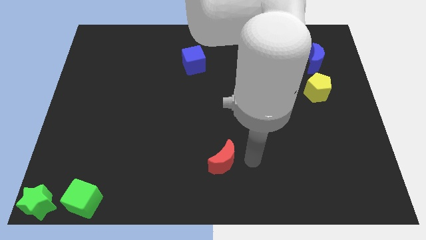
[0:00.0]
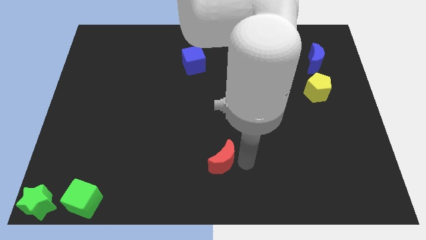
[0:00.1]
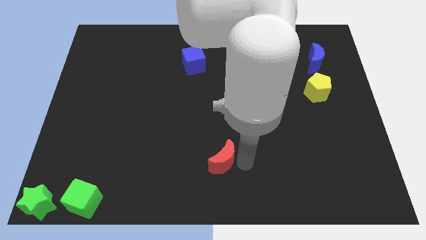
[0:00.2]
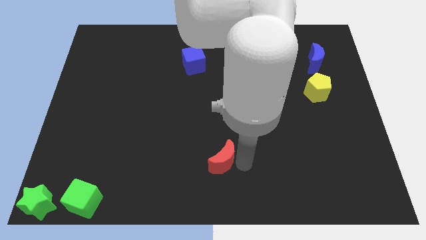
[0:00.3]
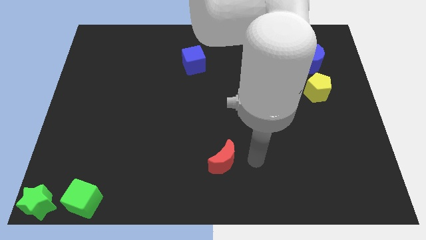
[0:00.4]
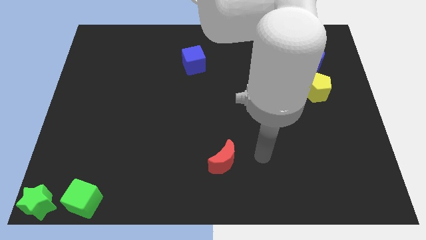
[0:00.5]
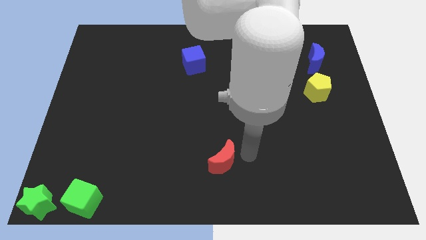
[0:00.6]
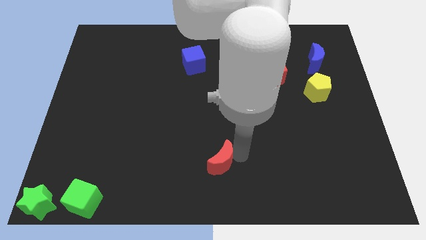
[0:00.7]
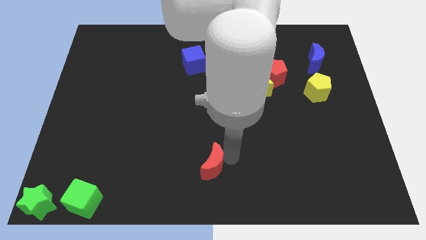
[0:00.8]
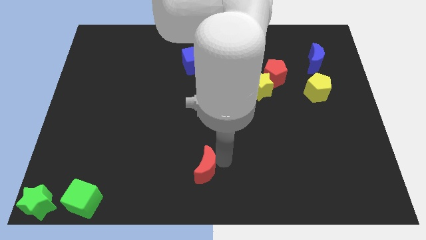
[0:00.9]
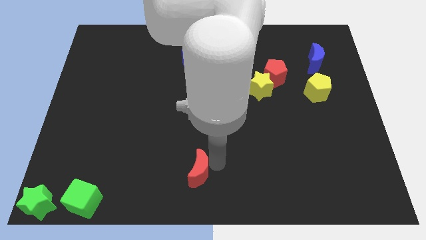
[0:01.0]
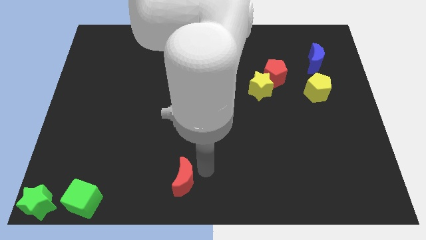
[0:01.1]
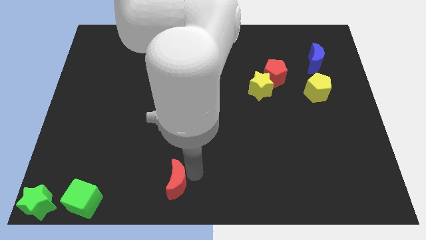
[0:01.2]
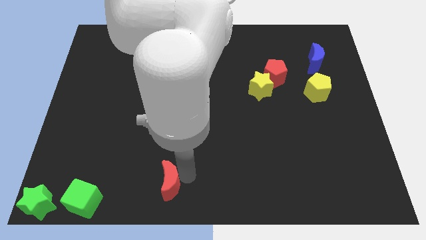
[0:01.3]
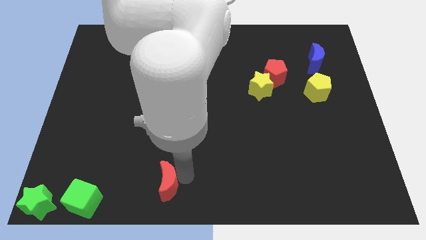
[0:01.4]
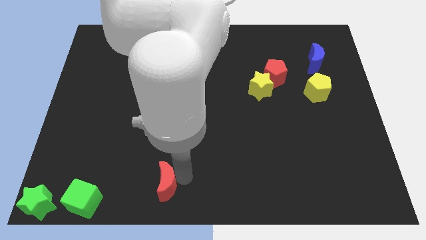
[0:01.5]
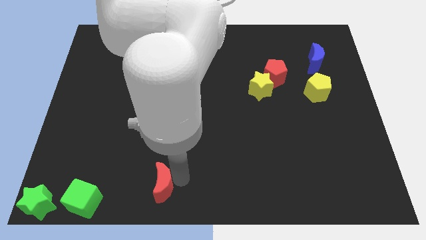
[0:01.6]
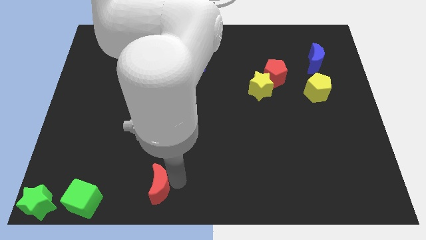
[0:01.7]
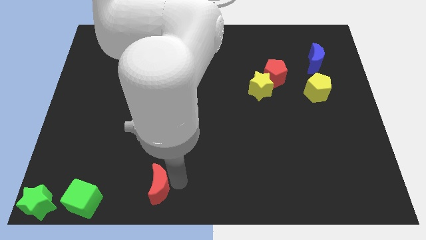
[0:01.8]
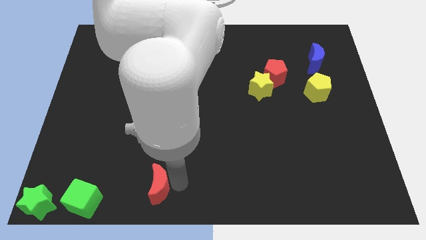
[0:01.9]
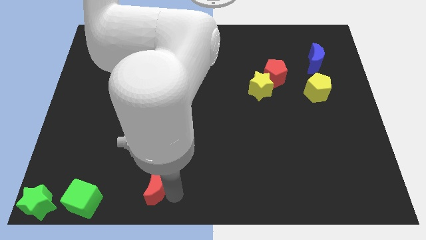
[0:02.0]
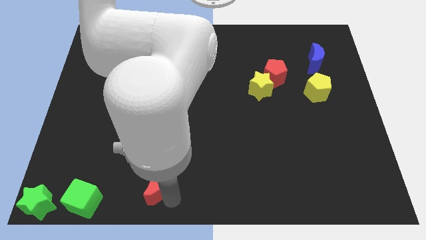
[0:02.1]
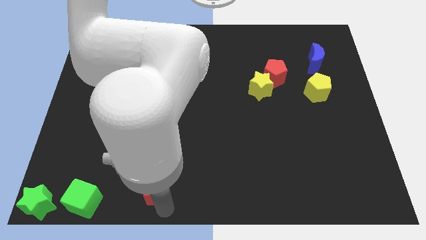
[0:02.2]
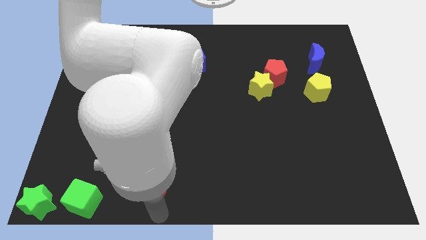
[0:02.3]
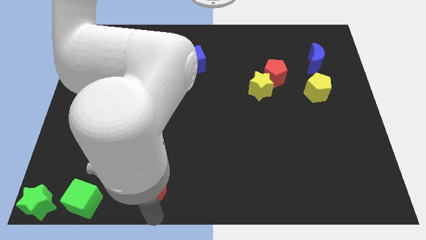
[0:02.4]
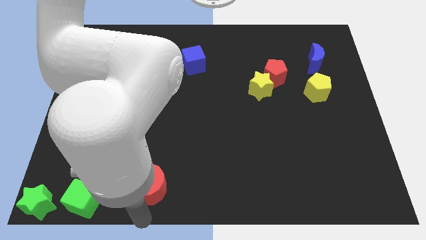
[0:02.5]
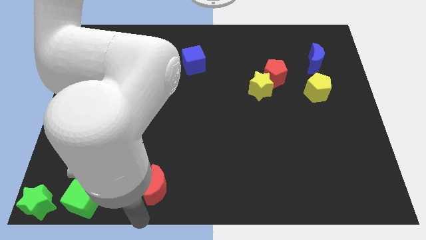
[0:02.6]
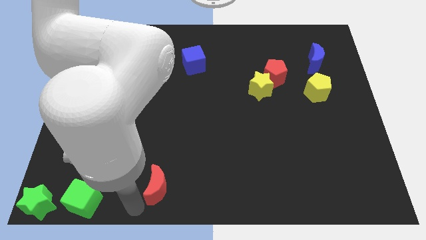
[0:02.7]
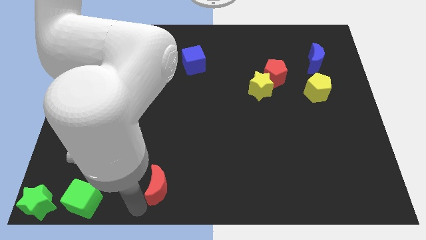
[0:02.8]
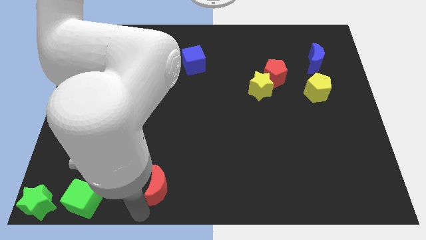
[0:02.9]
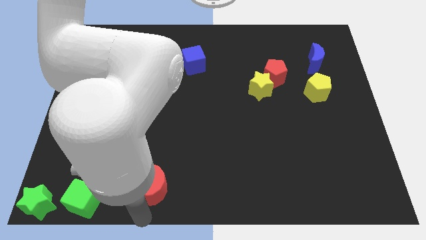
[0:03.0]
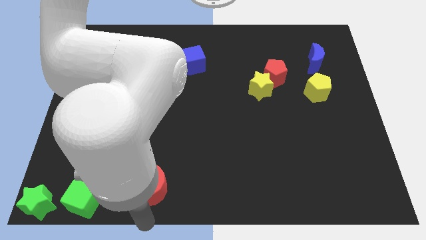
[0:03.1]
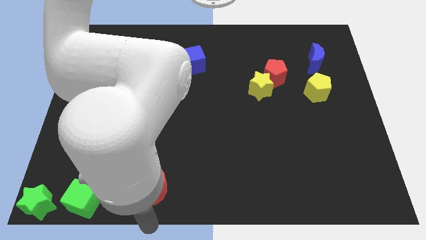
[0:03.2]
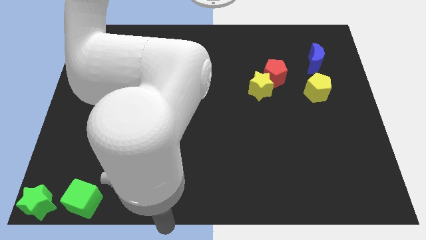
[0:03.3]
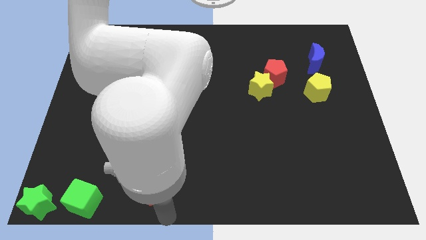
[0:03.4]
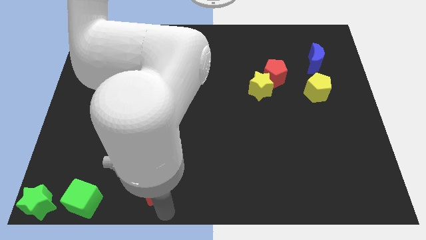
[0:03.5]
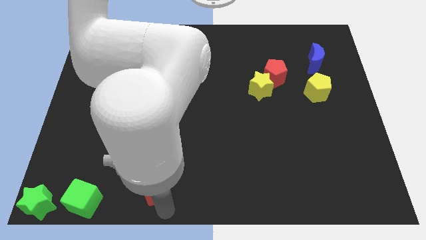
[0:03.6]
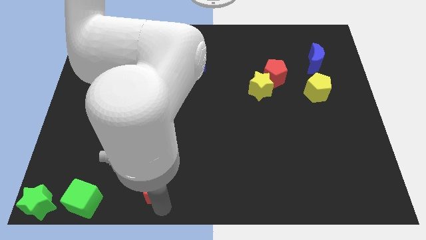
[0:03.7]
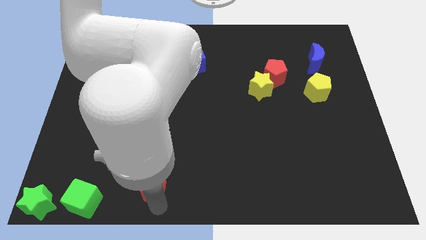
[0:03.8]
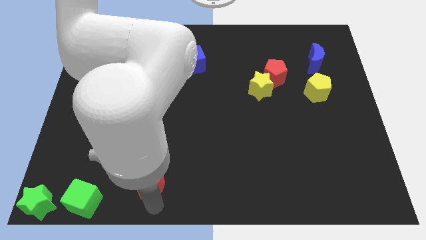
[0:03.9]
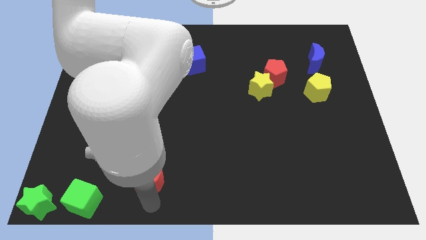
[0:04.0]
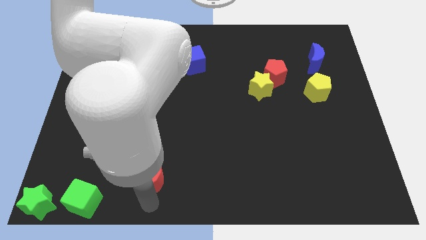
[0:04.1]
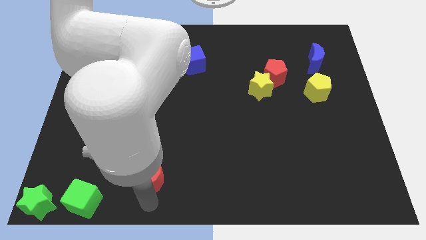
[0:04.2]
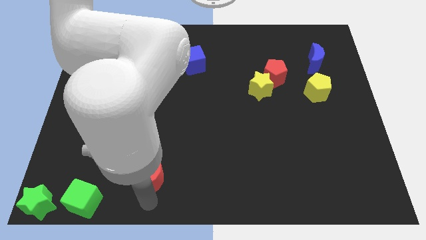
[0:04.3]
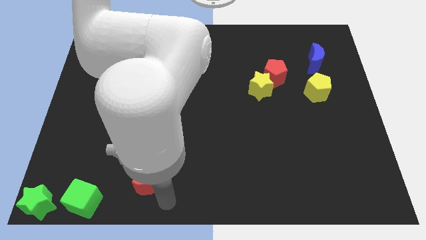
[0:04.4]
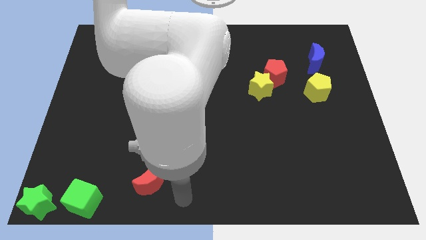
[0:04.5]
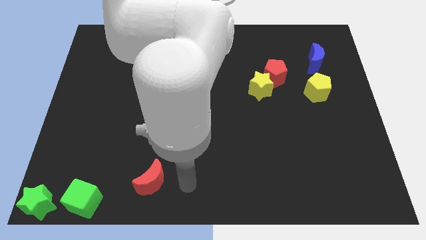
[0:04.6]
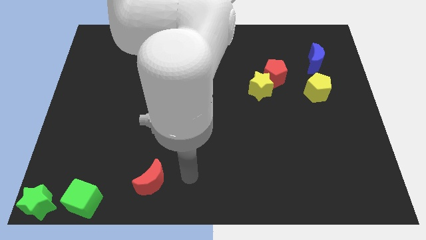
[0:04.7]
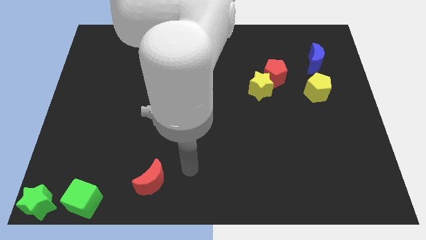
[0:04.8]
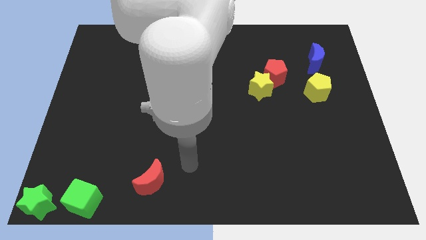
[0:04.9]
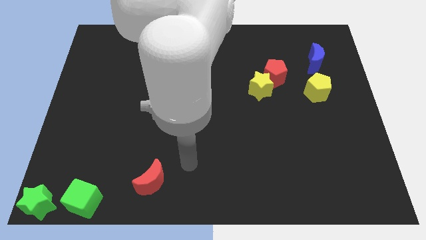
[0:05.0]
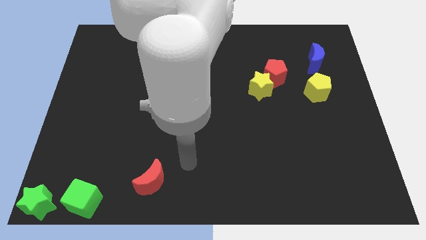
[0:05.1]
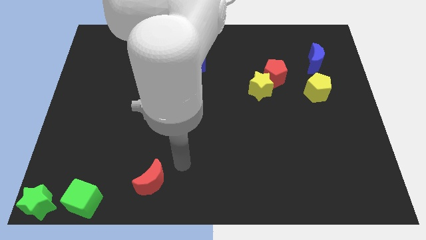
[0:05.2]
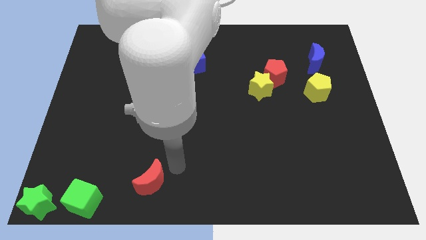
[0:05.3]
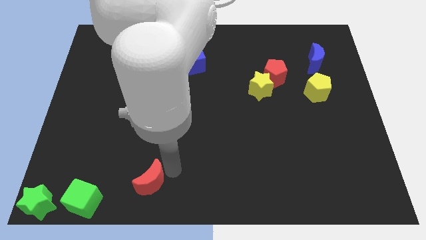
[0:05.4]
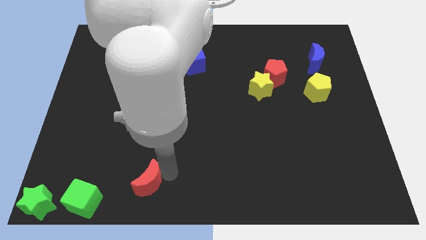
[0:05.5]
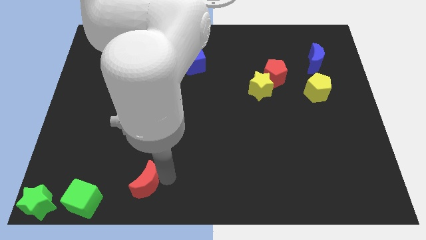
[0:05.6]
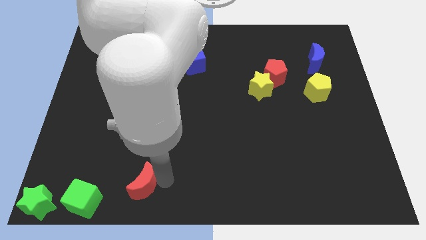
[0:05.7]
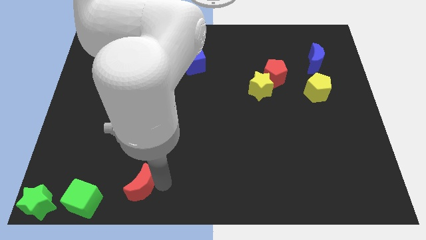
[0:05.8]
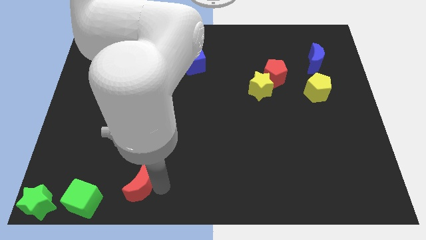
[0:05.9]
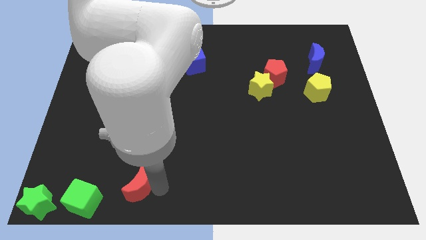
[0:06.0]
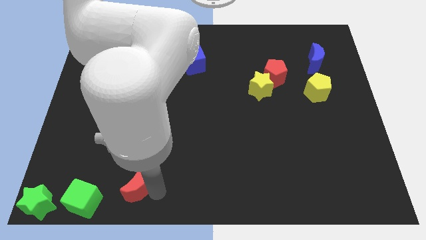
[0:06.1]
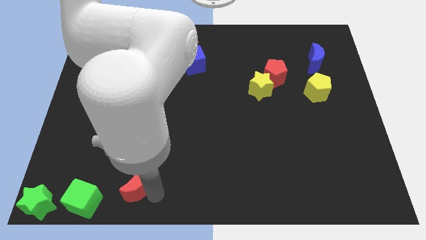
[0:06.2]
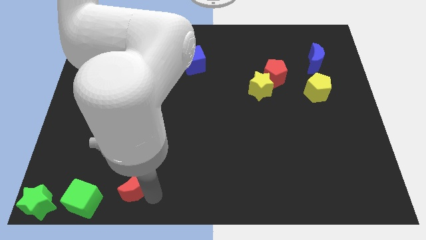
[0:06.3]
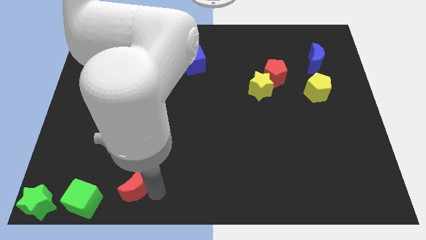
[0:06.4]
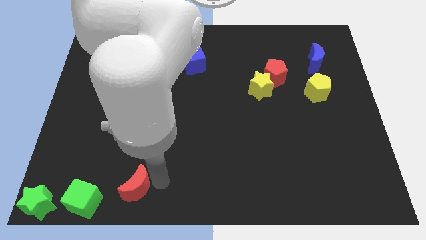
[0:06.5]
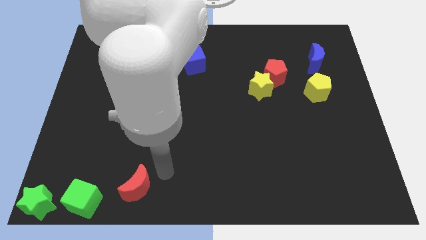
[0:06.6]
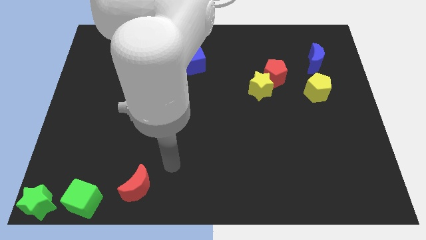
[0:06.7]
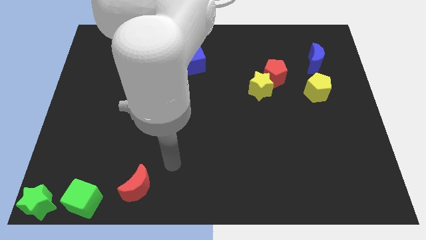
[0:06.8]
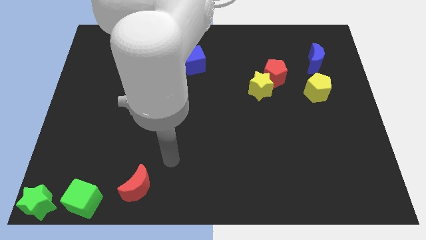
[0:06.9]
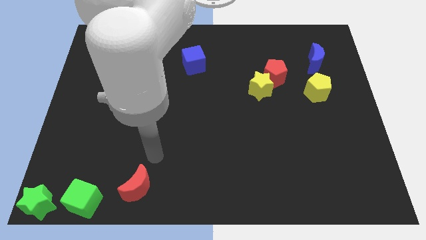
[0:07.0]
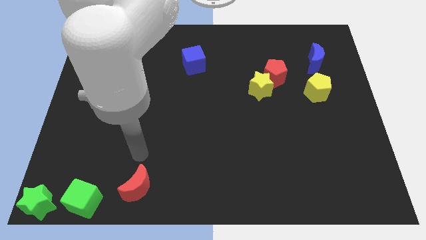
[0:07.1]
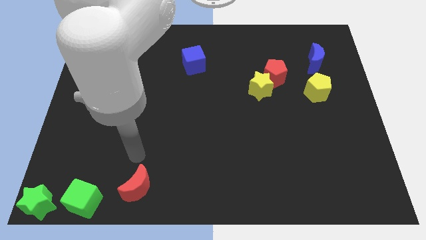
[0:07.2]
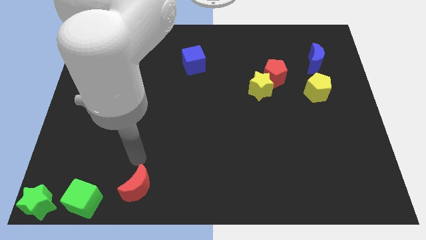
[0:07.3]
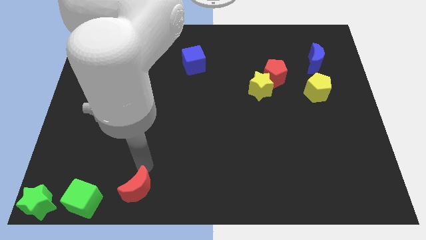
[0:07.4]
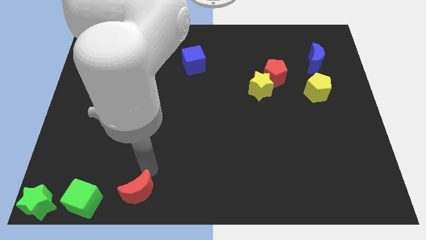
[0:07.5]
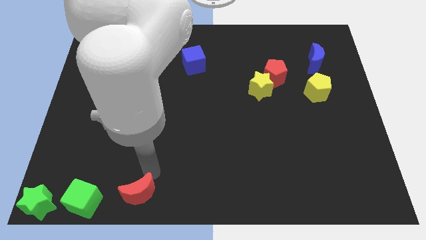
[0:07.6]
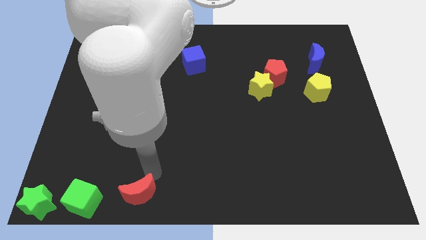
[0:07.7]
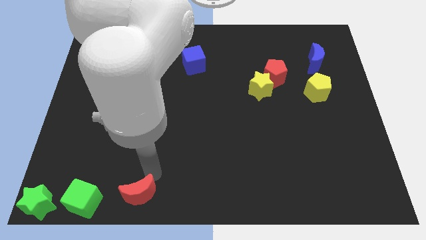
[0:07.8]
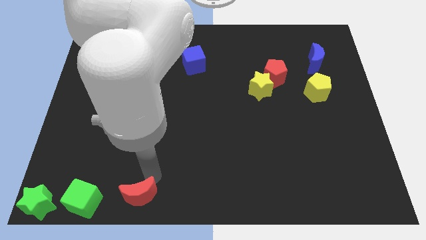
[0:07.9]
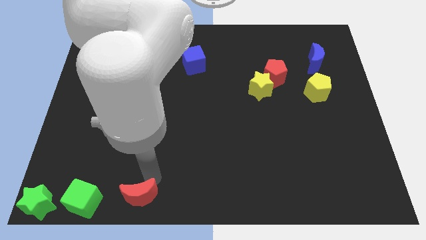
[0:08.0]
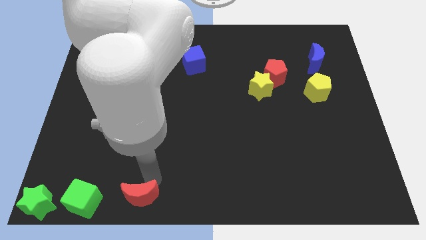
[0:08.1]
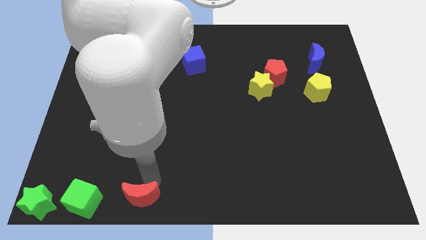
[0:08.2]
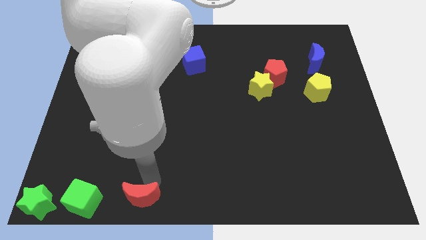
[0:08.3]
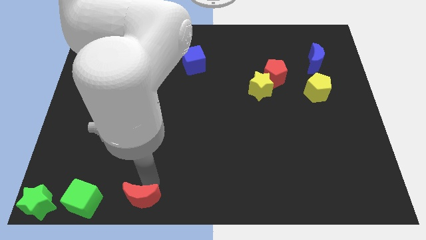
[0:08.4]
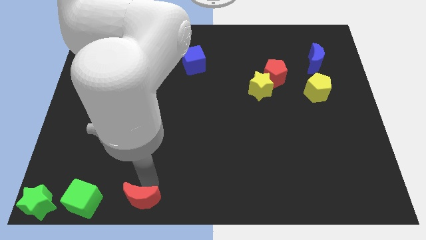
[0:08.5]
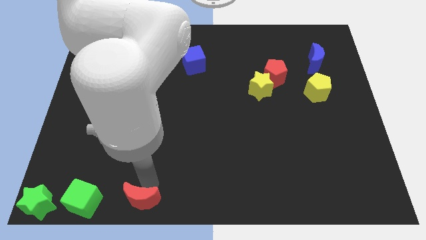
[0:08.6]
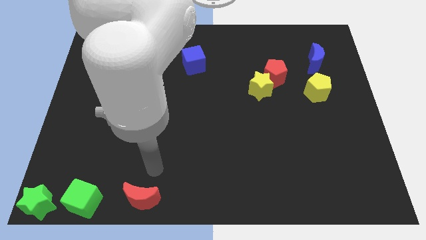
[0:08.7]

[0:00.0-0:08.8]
place the red moon at the right side of the green cube

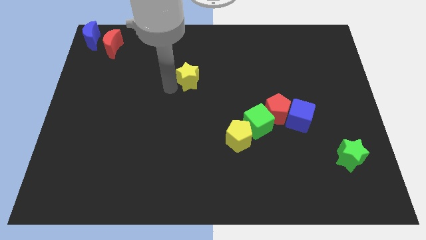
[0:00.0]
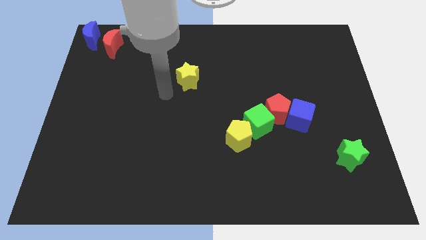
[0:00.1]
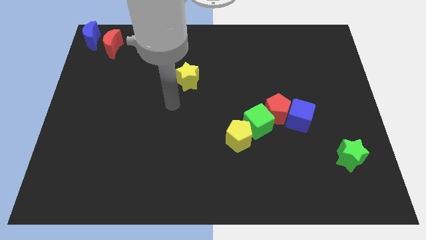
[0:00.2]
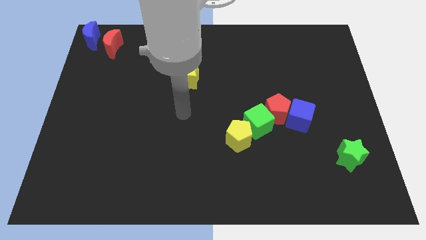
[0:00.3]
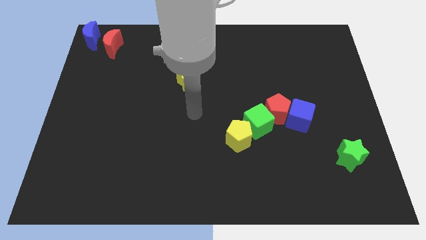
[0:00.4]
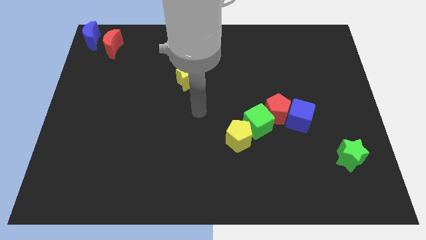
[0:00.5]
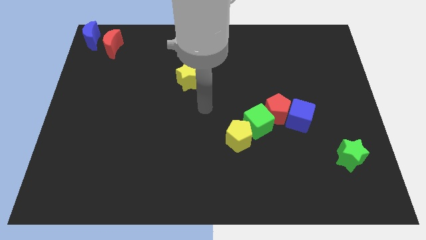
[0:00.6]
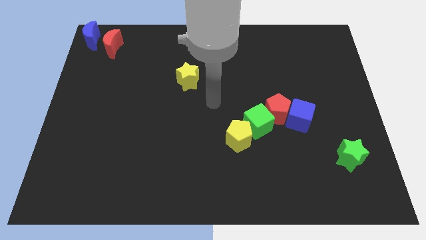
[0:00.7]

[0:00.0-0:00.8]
place your arm in between the yellow star and yellow pentagon
